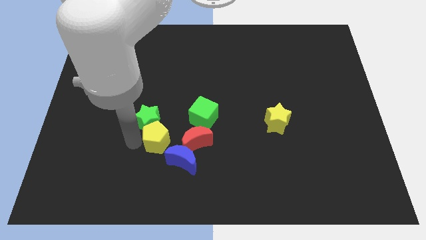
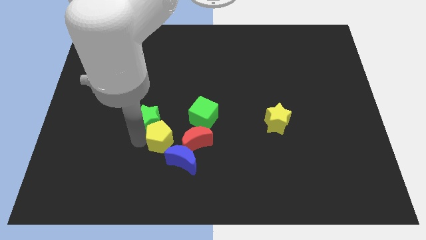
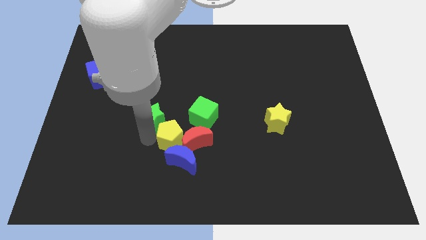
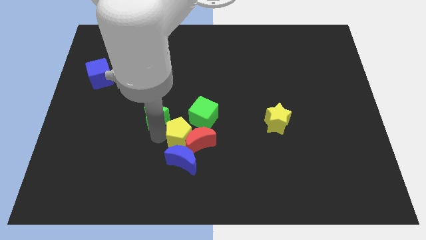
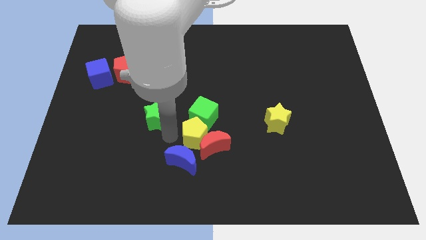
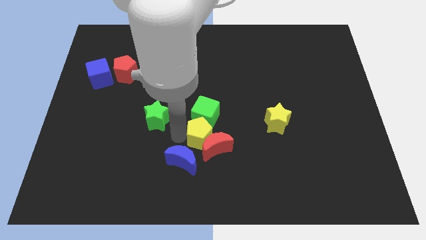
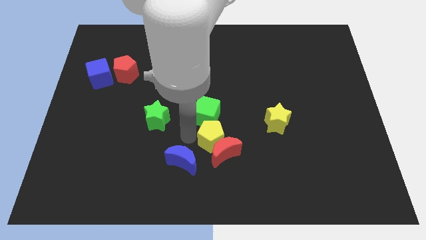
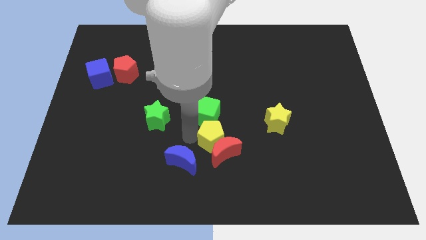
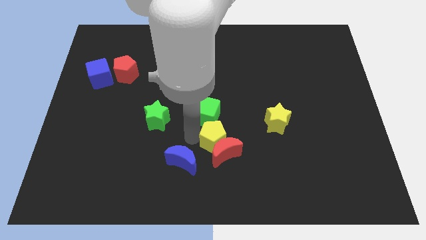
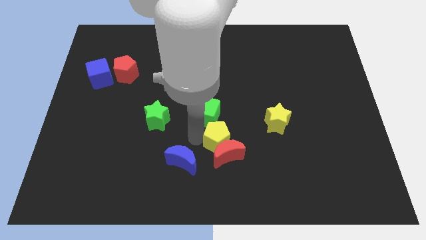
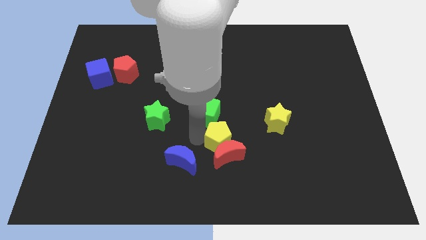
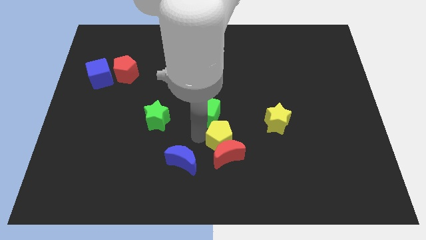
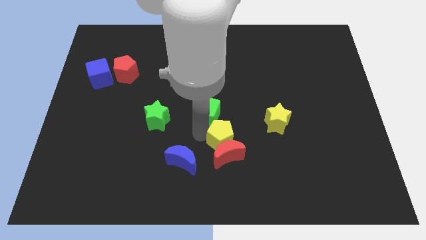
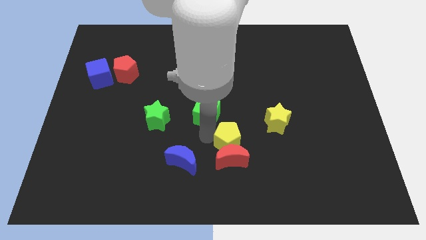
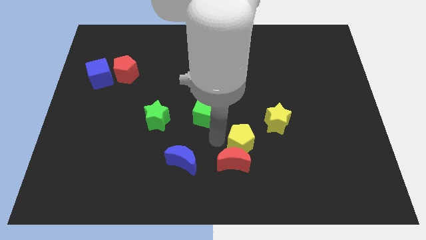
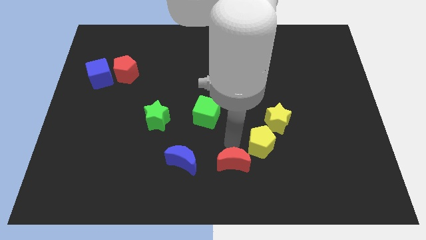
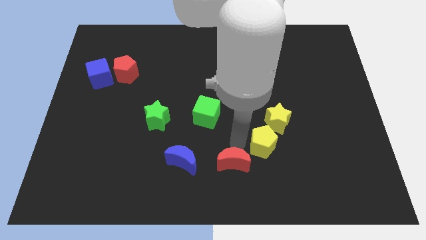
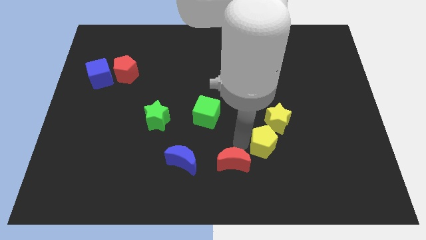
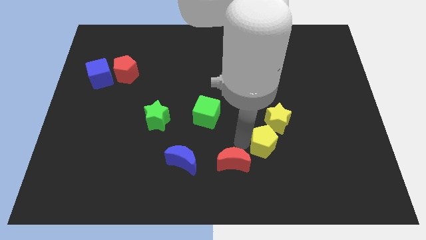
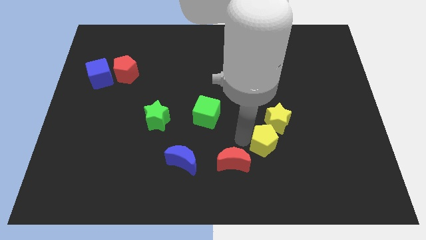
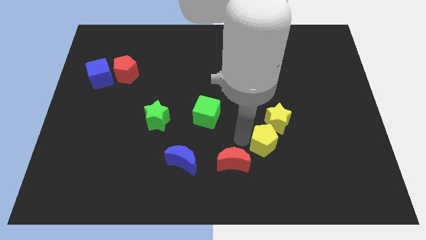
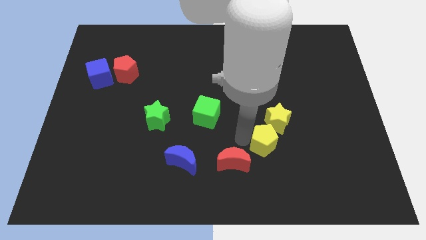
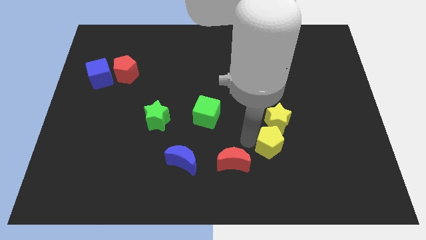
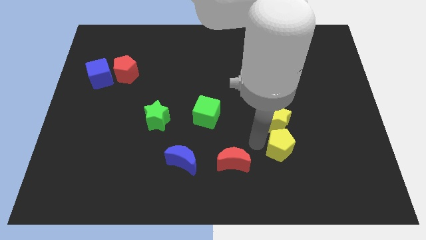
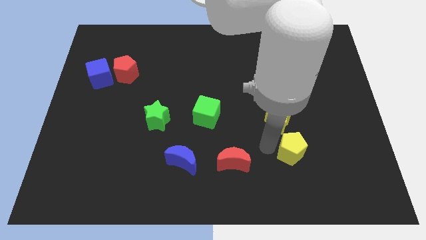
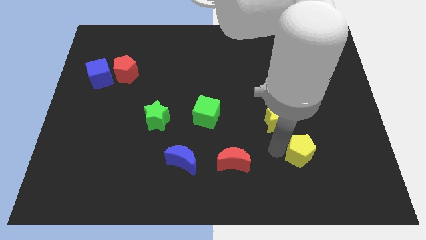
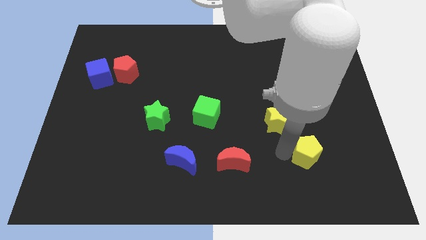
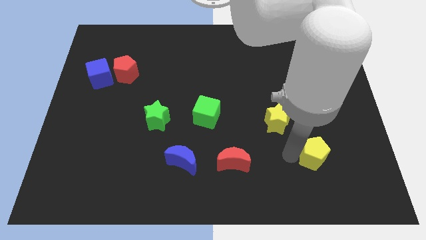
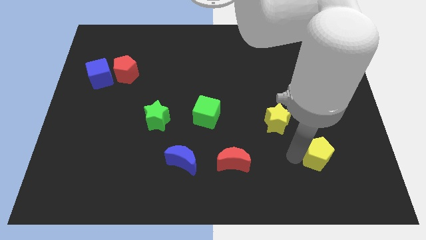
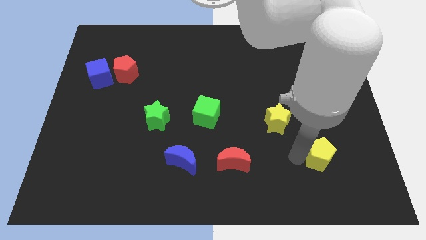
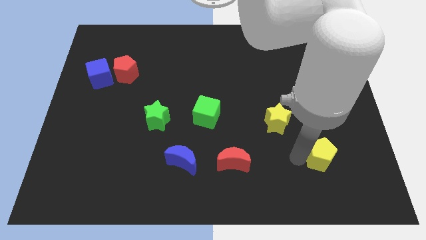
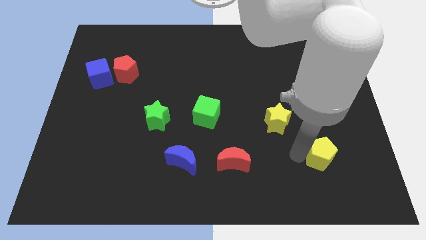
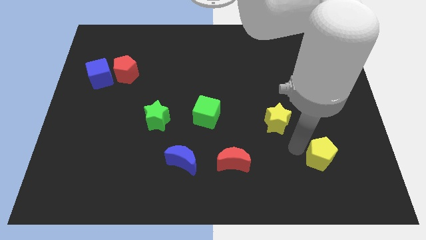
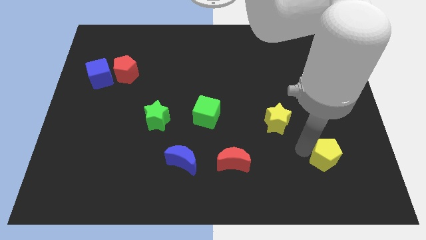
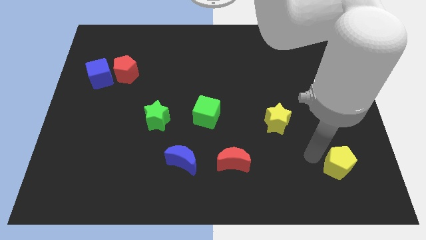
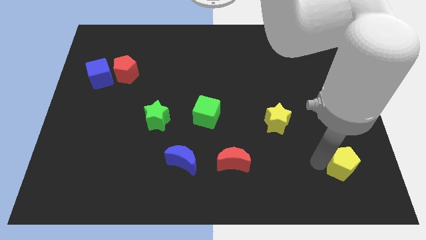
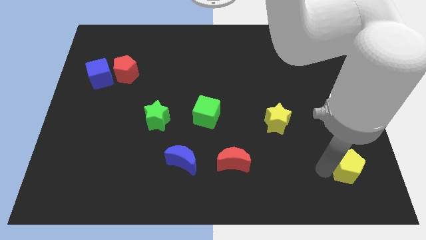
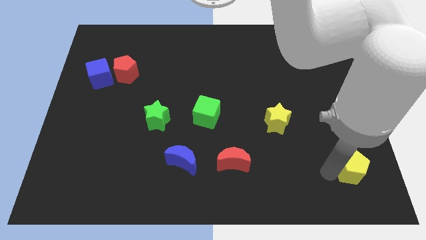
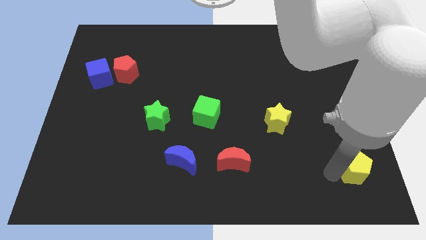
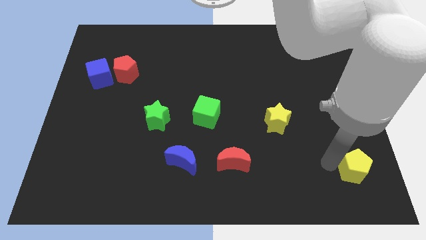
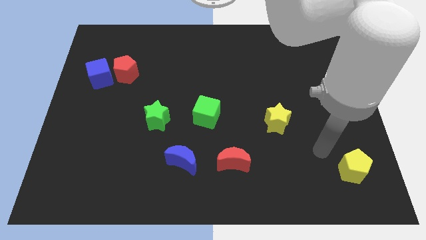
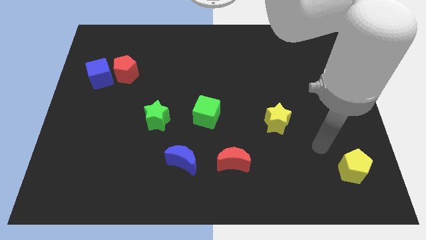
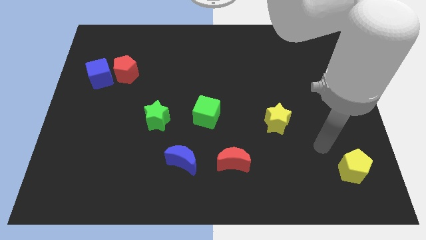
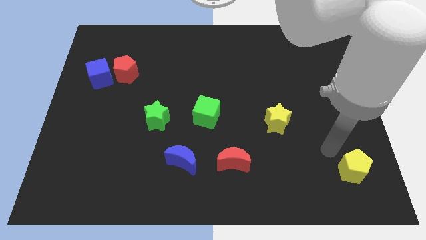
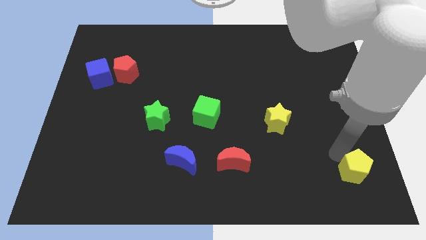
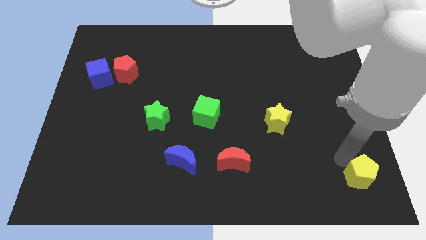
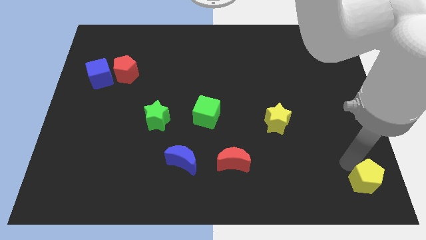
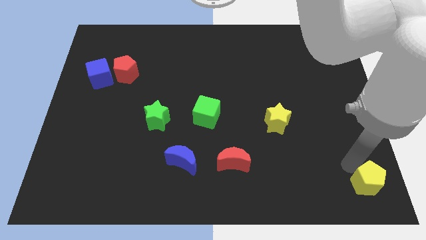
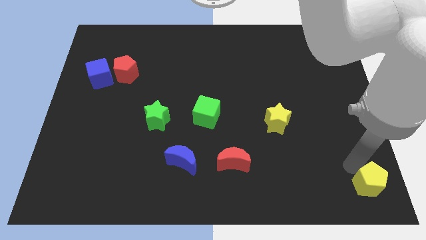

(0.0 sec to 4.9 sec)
push the yellow pentagon to the bottom right

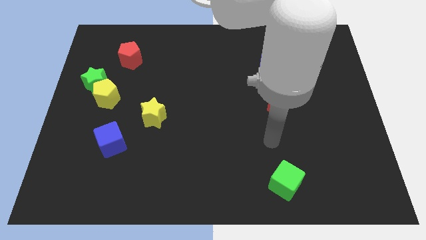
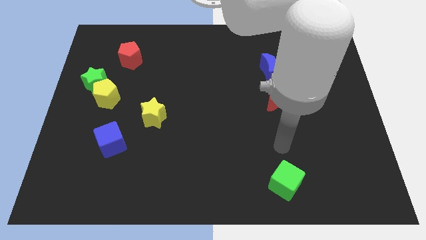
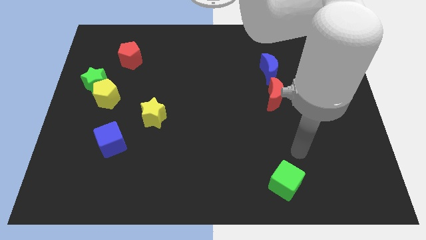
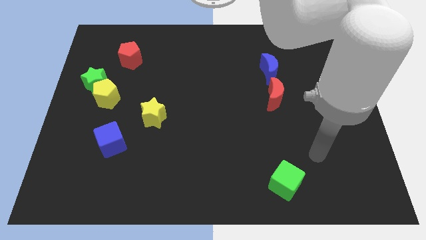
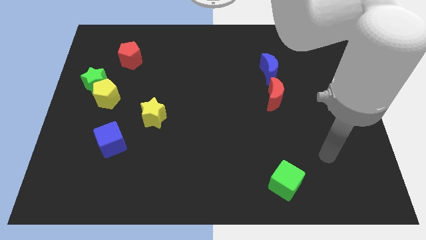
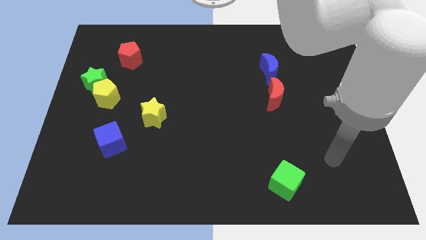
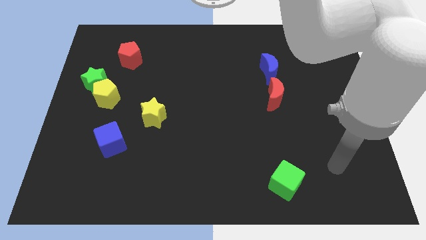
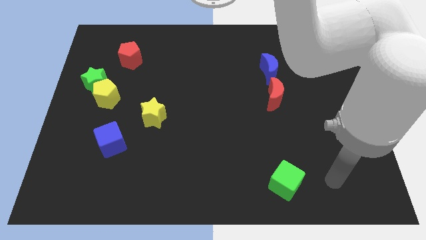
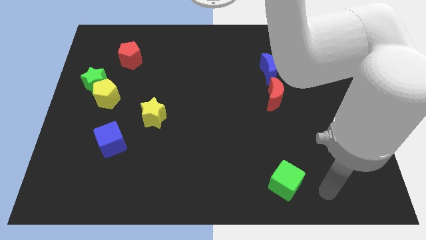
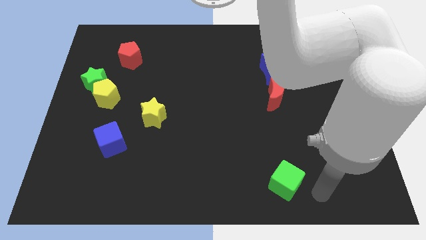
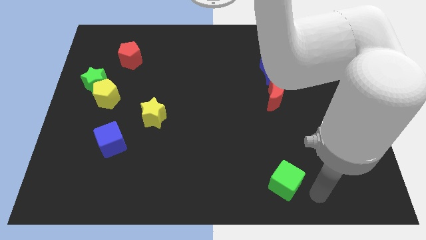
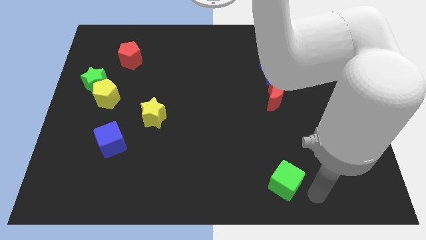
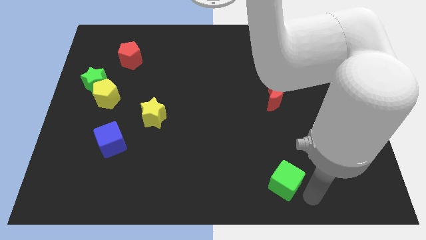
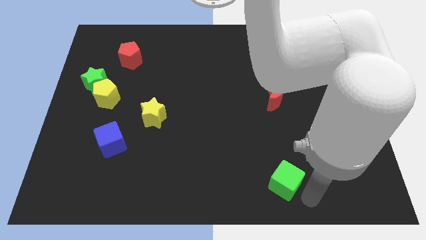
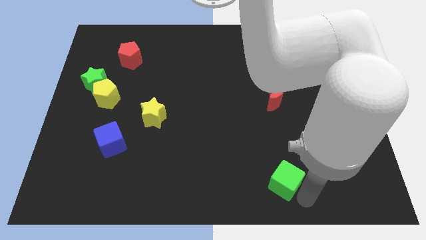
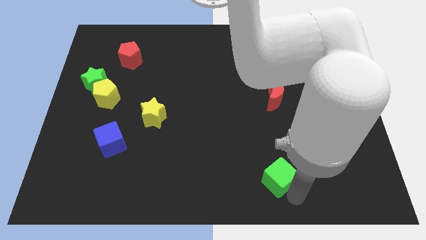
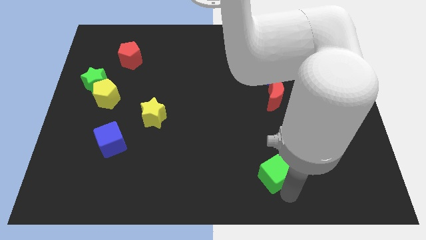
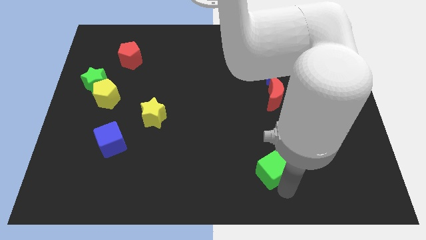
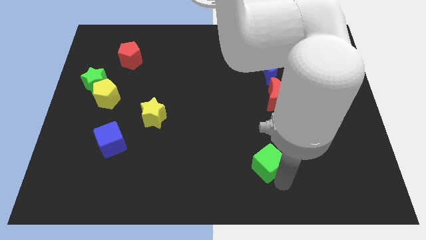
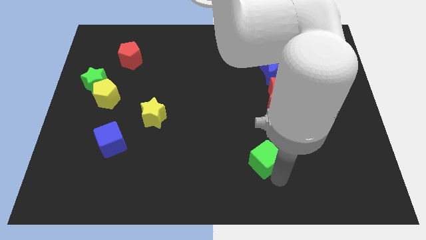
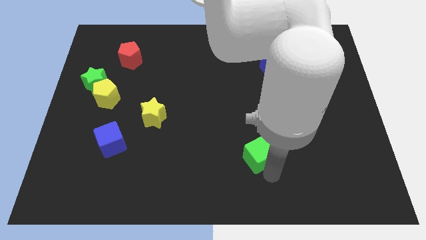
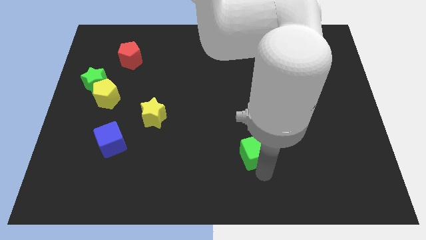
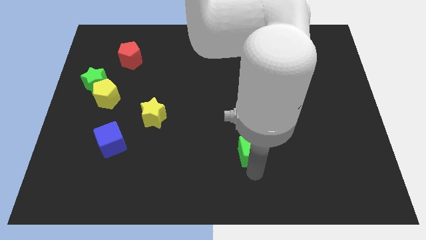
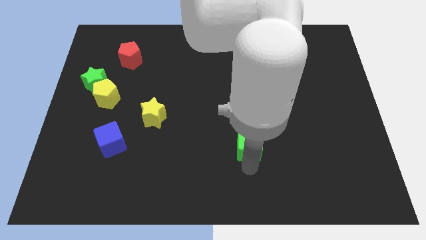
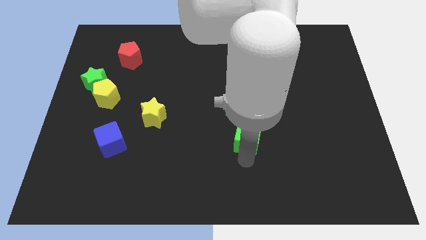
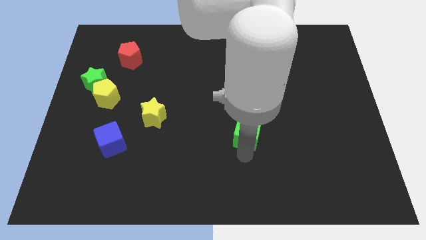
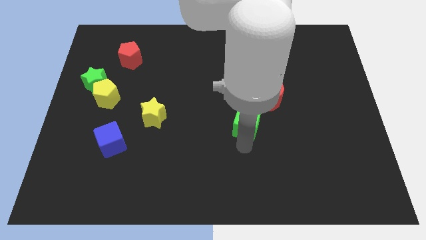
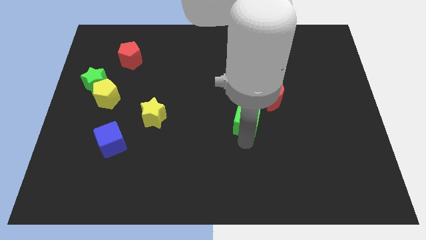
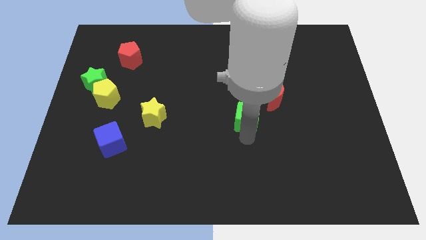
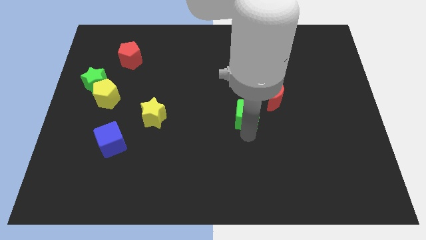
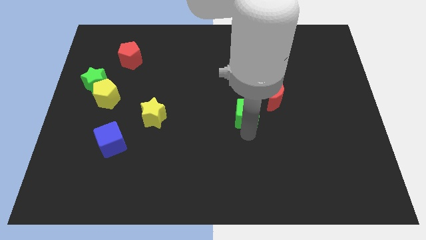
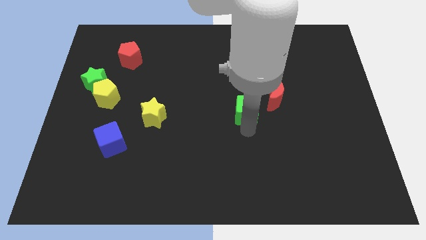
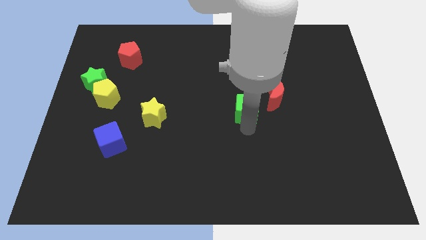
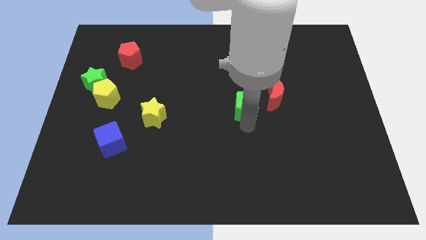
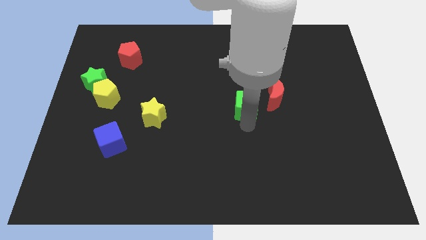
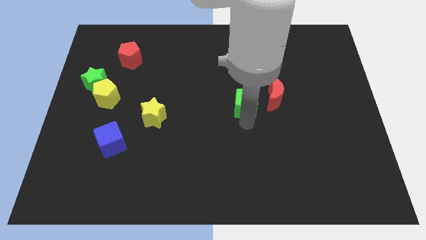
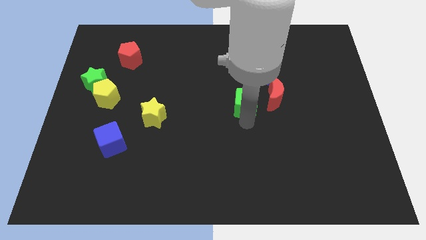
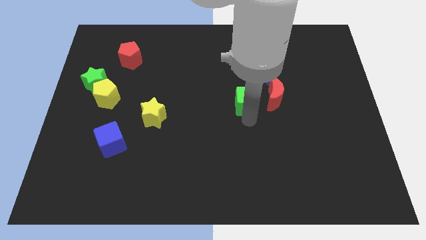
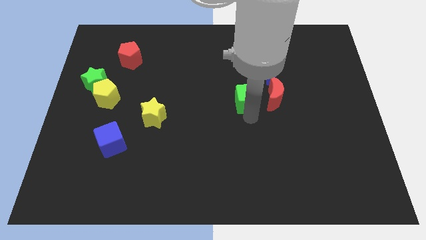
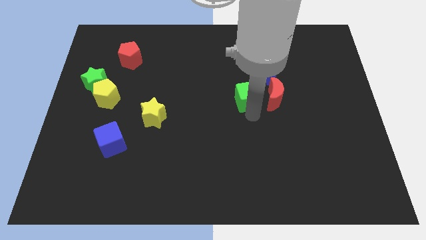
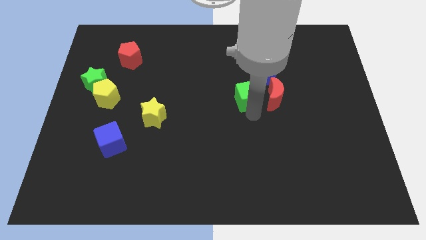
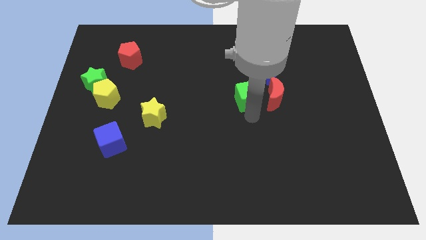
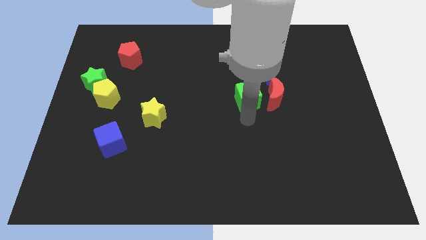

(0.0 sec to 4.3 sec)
move the green cube towards the center of the board
